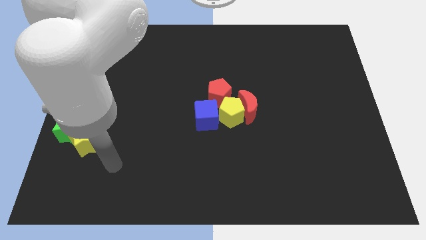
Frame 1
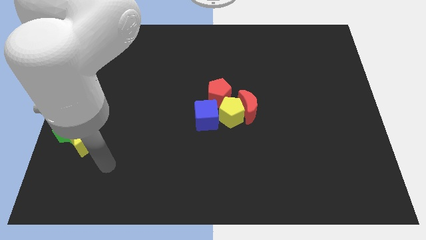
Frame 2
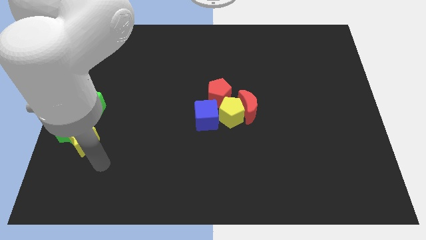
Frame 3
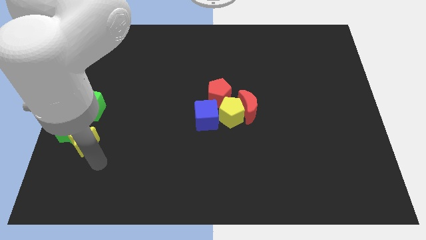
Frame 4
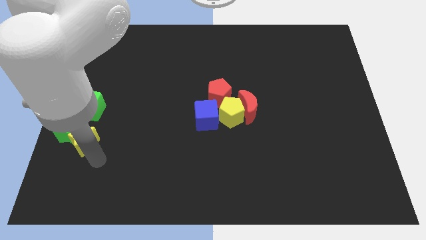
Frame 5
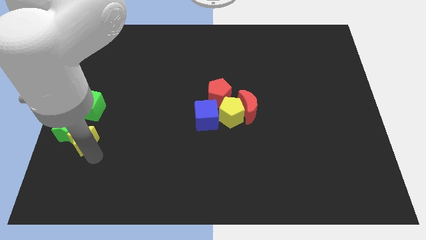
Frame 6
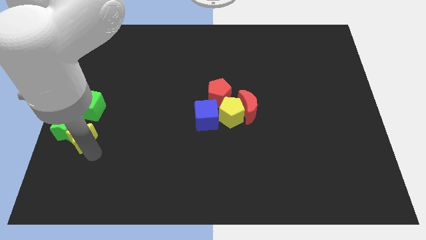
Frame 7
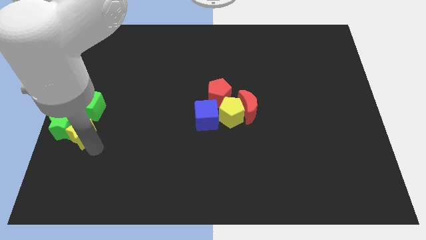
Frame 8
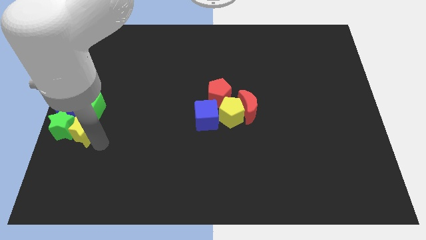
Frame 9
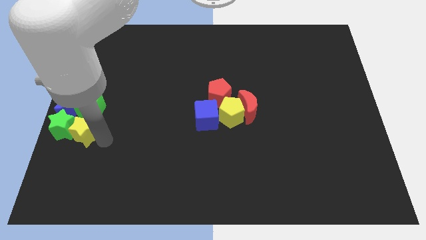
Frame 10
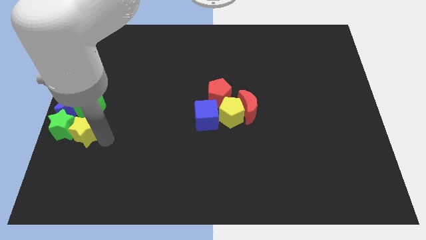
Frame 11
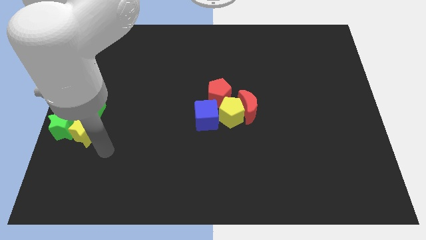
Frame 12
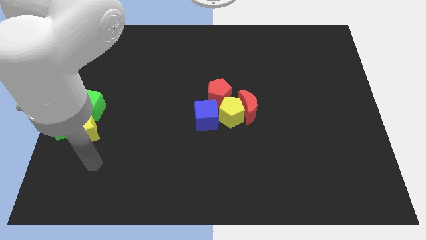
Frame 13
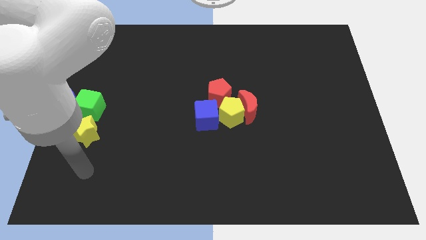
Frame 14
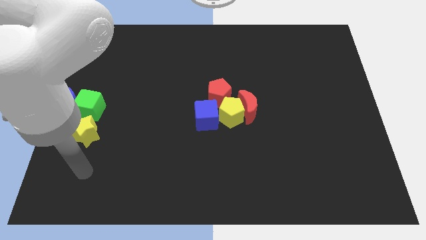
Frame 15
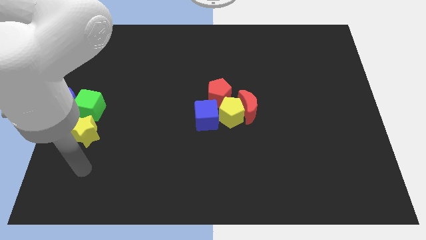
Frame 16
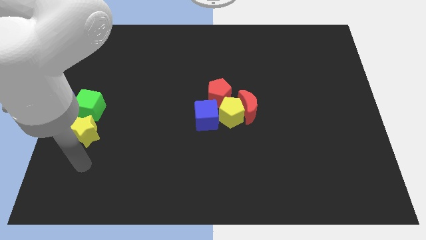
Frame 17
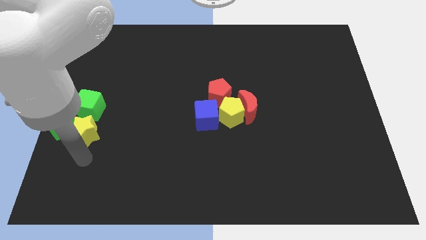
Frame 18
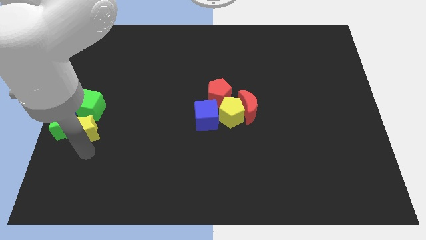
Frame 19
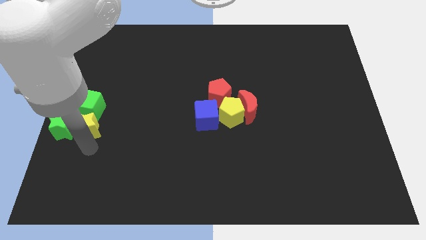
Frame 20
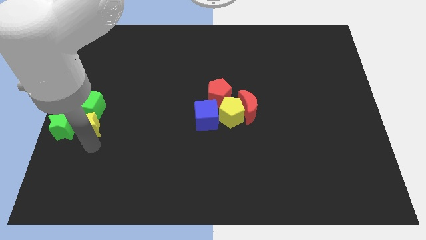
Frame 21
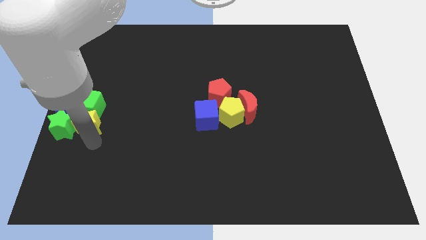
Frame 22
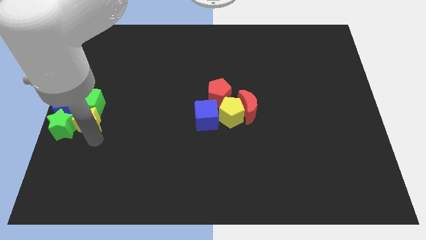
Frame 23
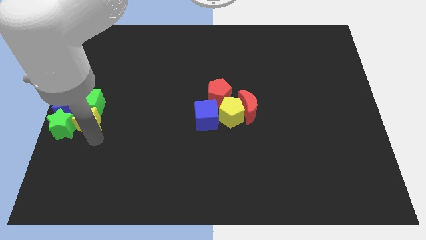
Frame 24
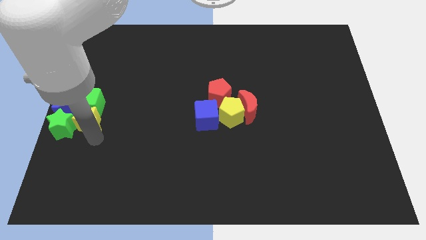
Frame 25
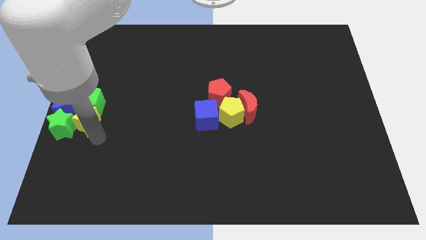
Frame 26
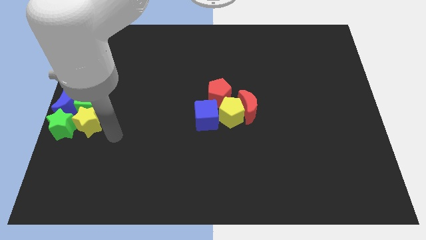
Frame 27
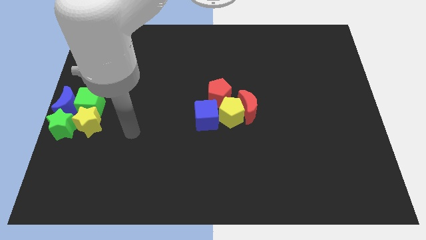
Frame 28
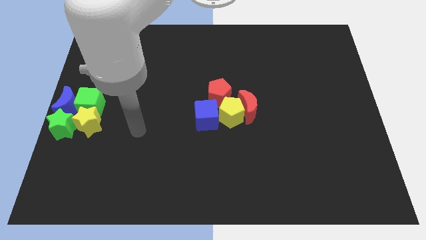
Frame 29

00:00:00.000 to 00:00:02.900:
push both the stars into the green cube and blue crescent to form the group of blocks at the center left side of the board

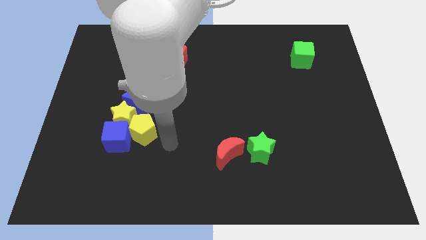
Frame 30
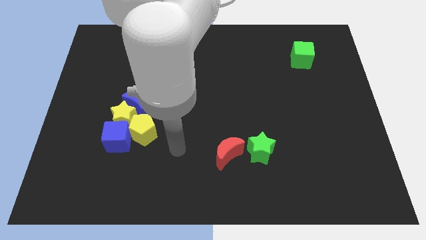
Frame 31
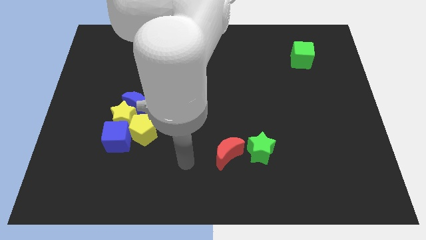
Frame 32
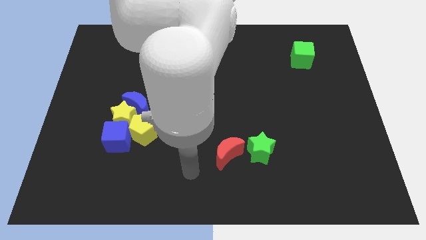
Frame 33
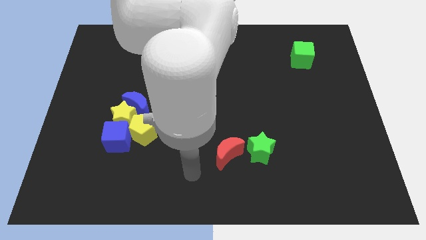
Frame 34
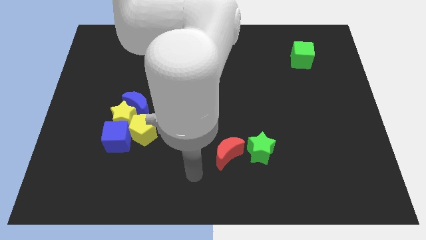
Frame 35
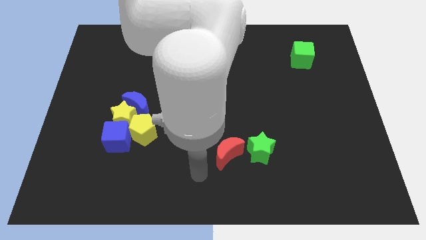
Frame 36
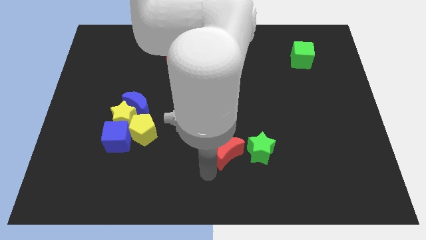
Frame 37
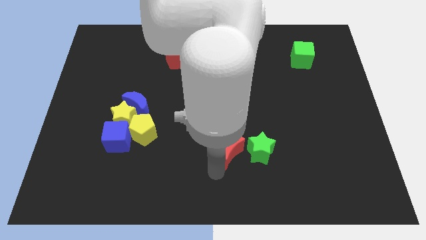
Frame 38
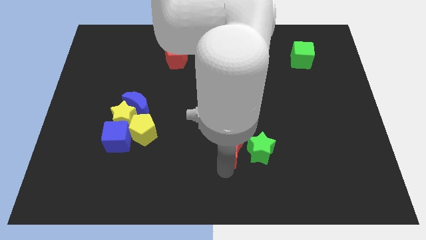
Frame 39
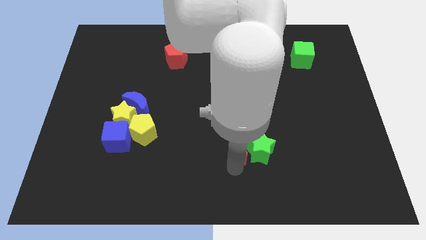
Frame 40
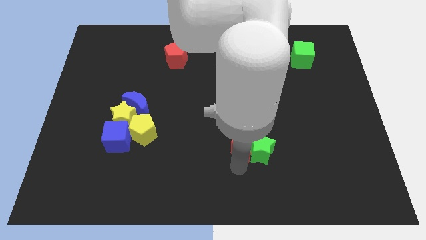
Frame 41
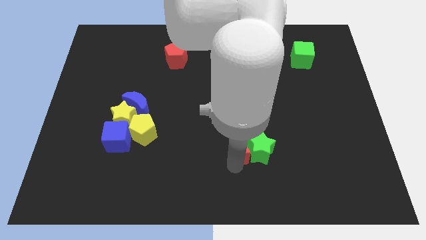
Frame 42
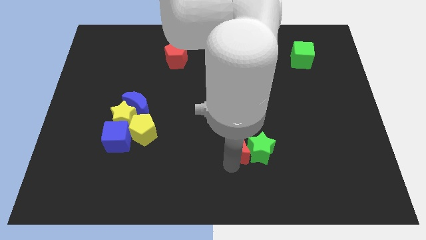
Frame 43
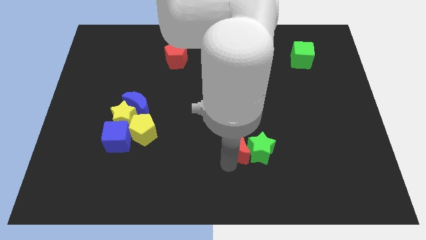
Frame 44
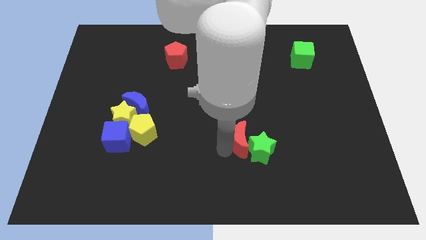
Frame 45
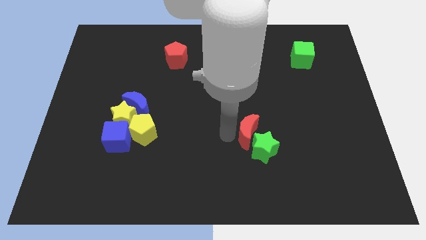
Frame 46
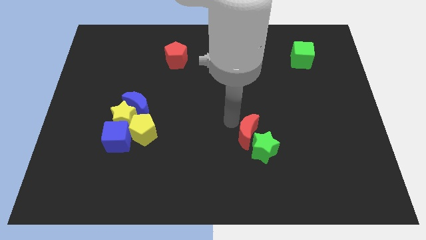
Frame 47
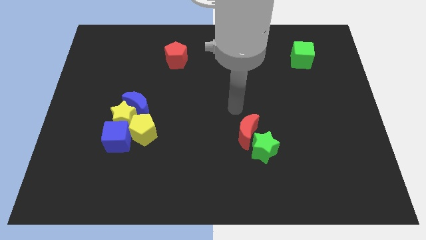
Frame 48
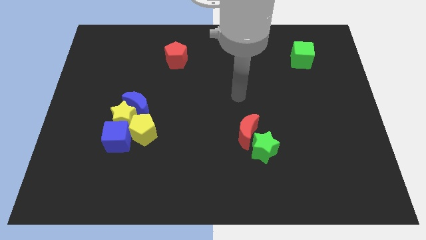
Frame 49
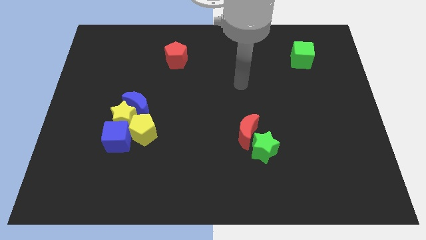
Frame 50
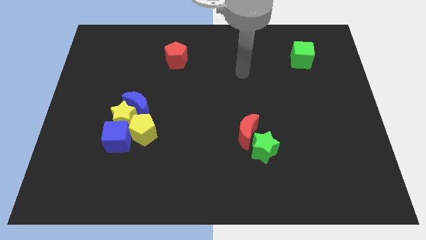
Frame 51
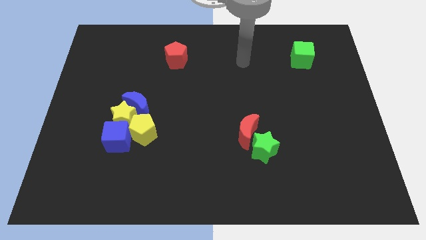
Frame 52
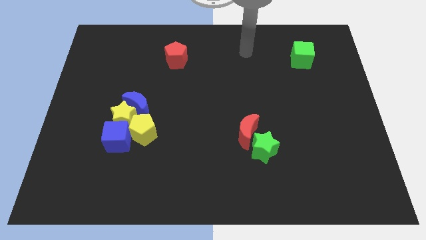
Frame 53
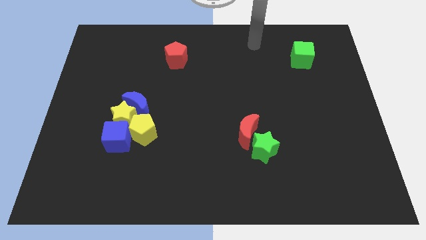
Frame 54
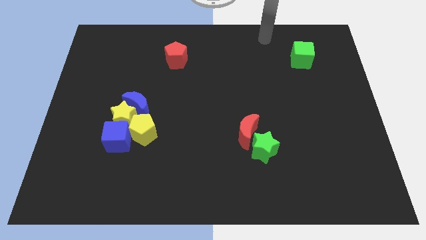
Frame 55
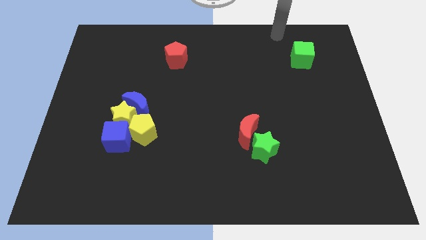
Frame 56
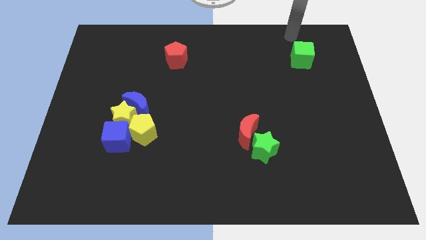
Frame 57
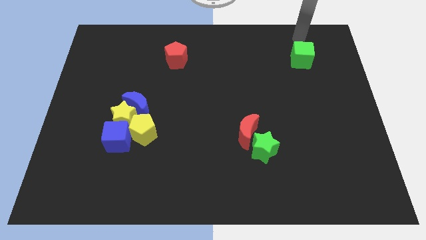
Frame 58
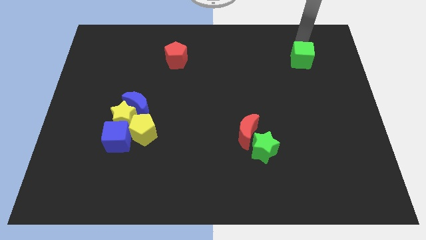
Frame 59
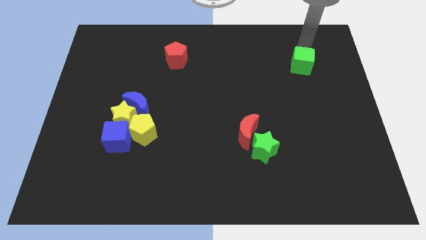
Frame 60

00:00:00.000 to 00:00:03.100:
slightly move the red crescent towards up

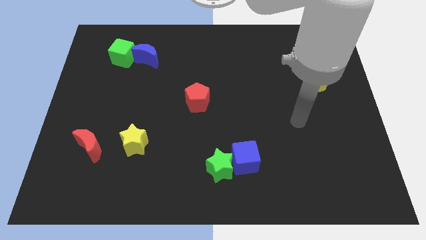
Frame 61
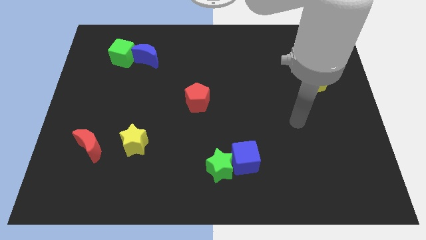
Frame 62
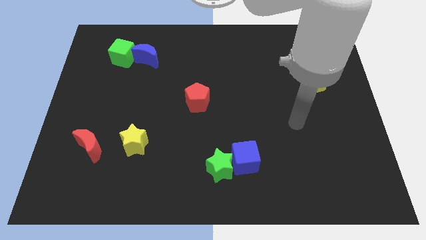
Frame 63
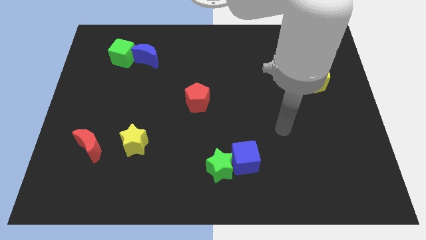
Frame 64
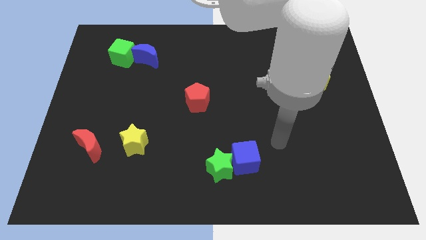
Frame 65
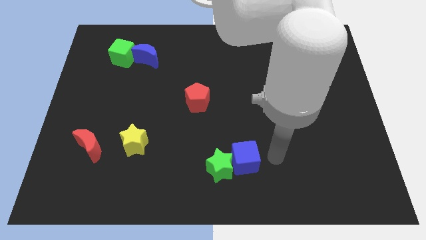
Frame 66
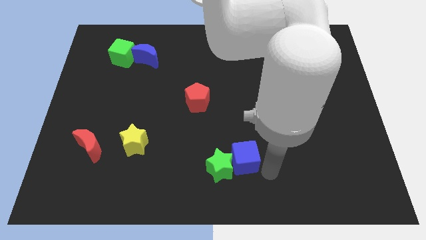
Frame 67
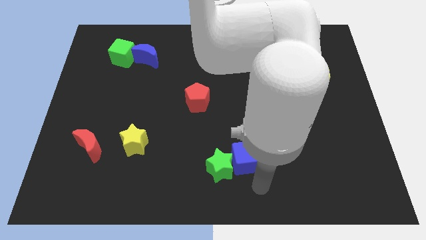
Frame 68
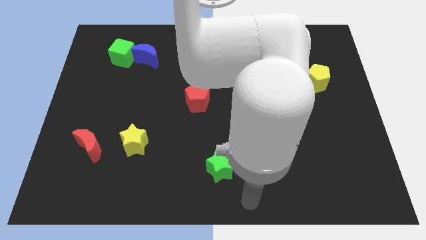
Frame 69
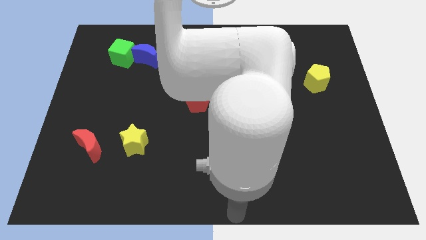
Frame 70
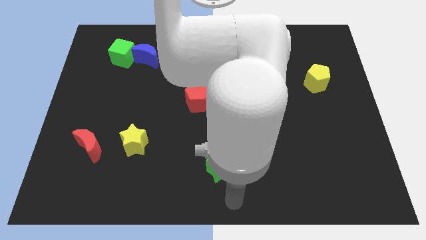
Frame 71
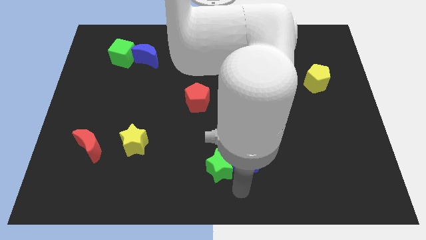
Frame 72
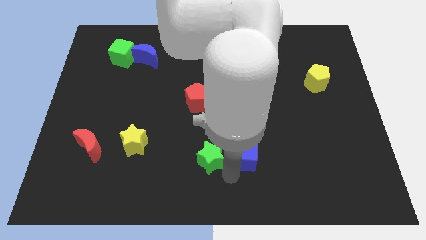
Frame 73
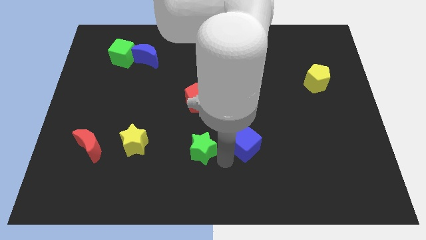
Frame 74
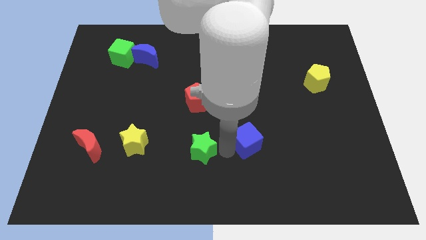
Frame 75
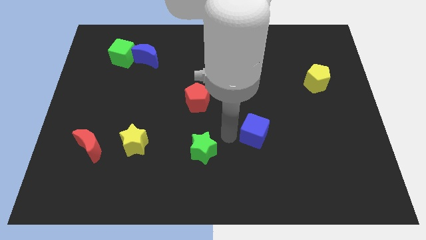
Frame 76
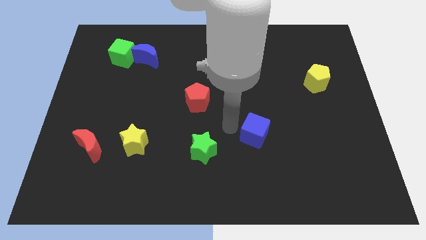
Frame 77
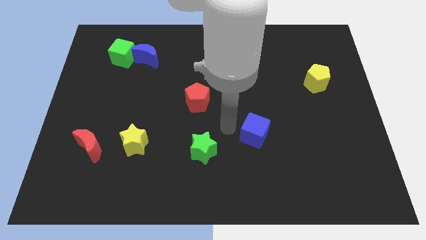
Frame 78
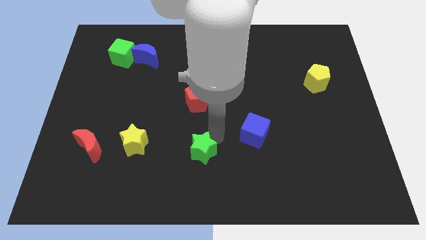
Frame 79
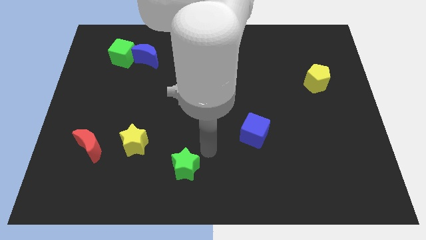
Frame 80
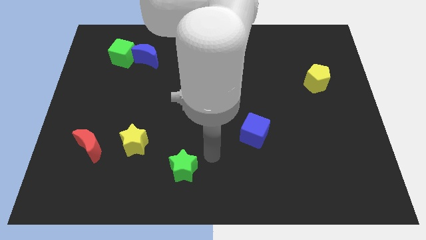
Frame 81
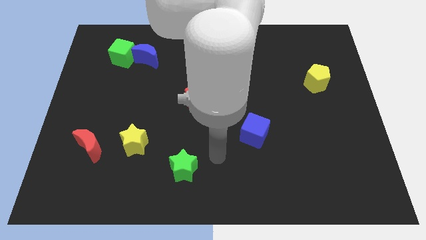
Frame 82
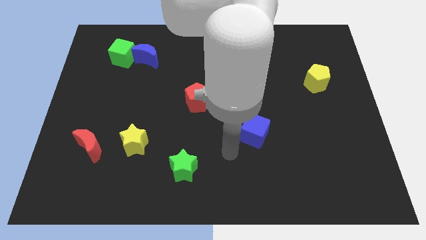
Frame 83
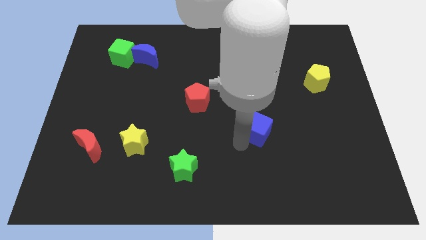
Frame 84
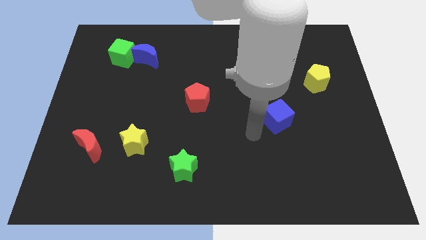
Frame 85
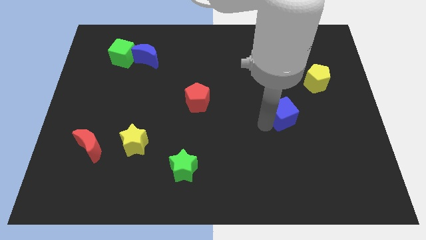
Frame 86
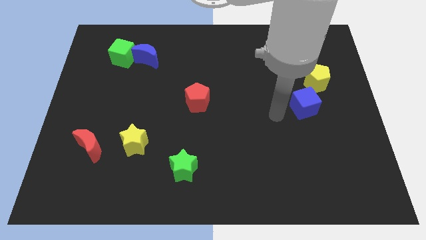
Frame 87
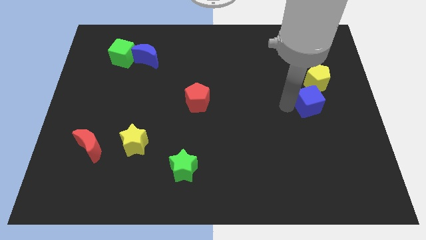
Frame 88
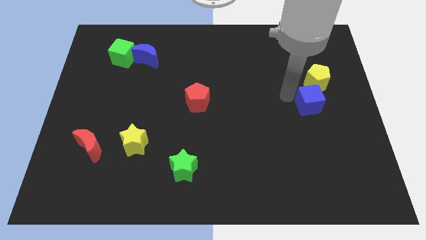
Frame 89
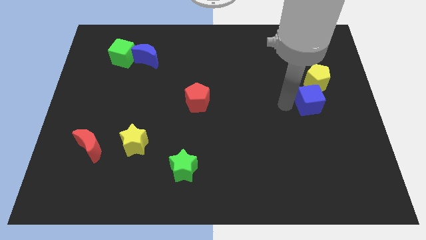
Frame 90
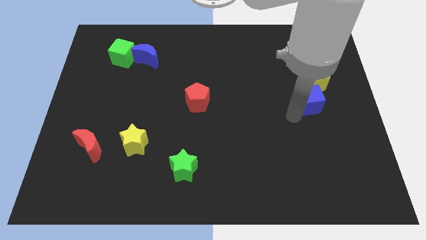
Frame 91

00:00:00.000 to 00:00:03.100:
push blue cube below yellow pentagon
